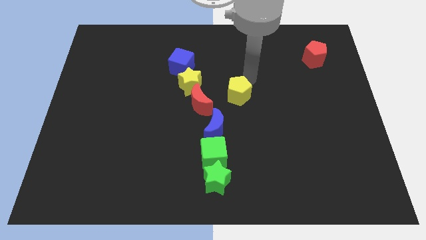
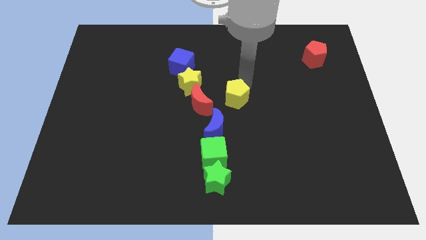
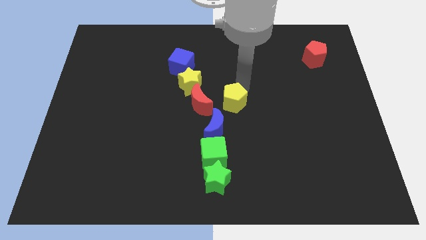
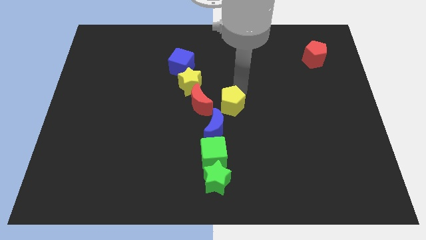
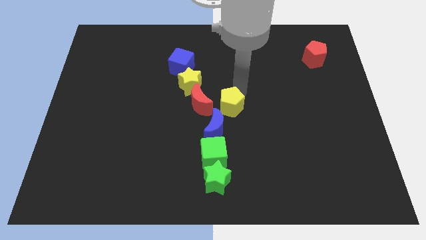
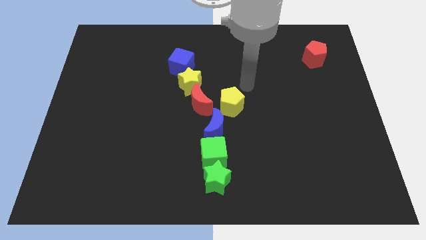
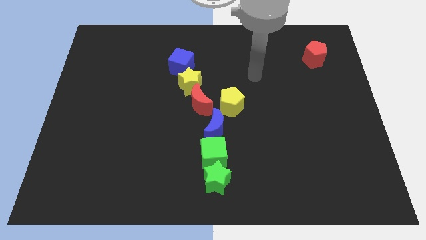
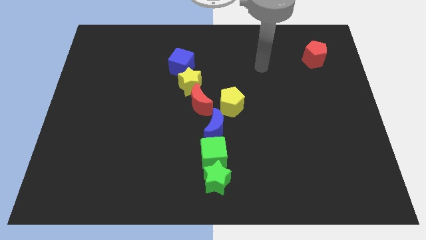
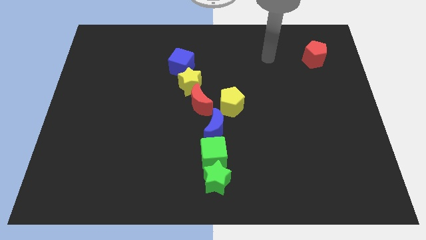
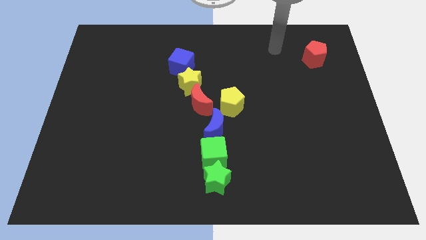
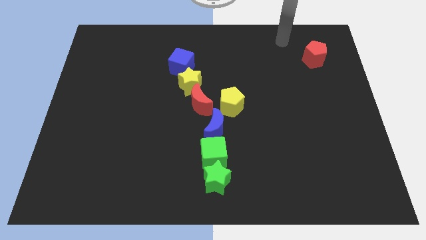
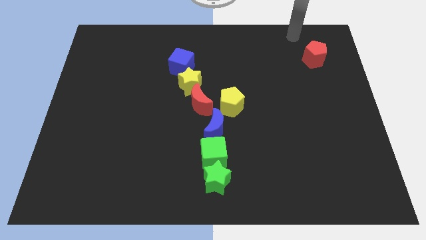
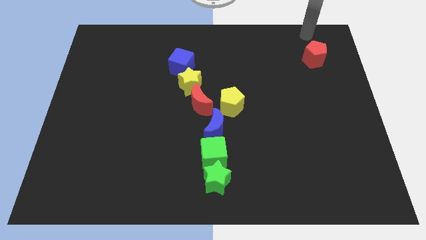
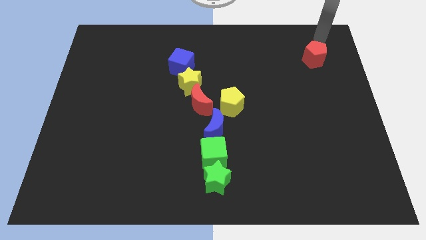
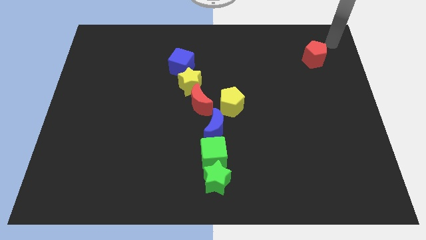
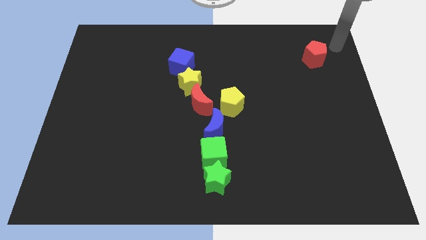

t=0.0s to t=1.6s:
adjust the yellow pentagon on the top right of the blue crescent

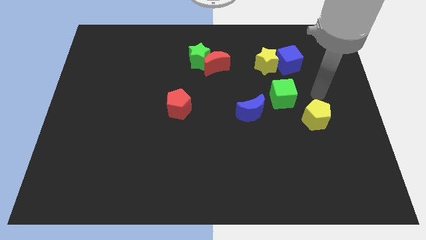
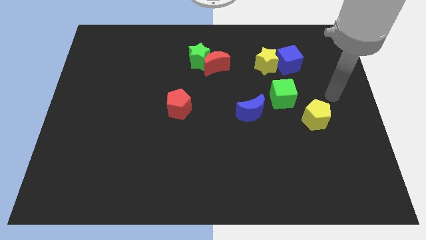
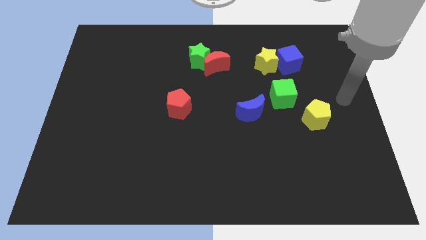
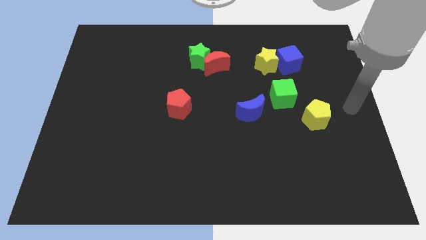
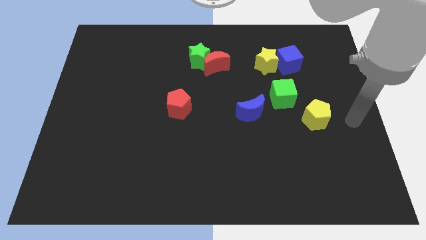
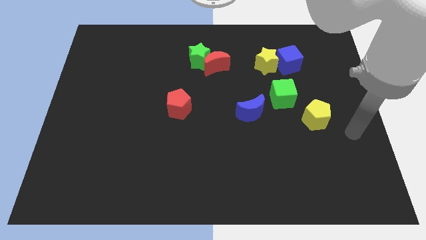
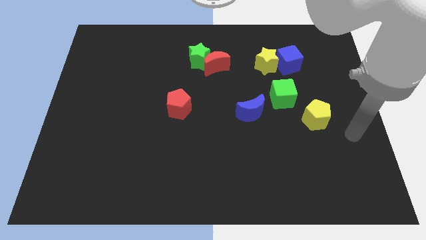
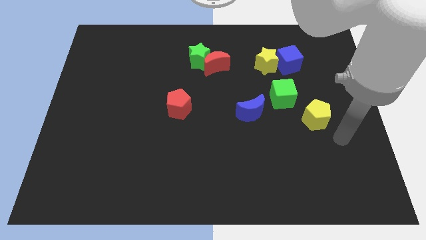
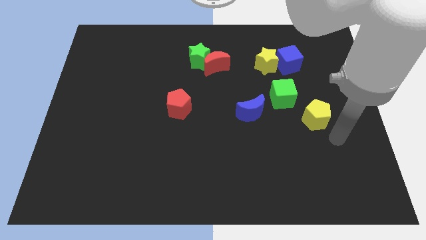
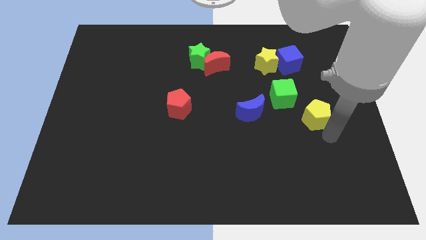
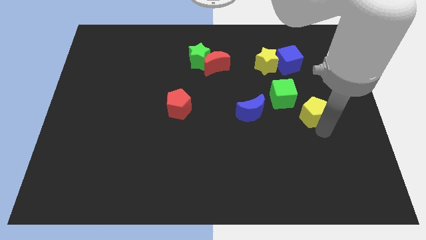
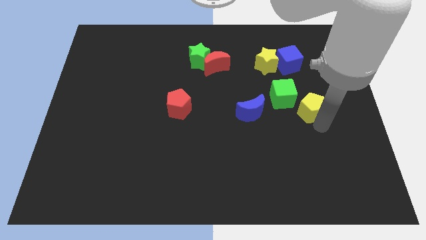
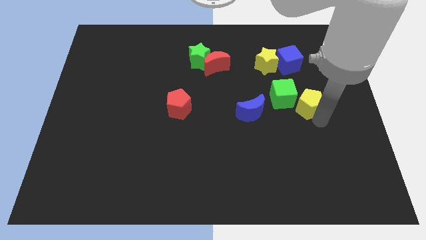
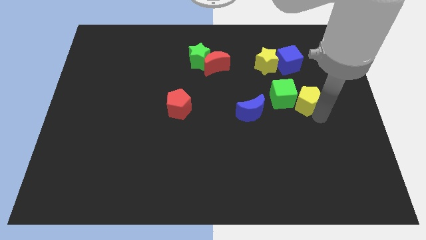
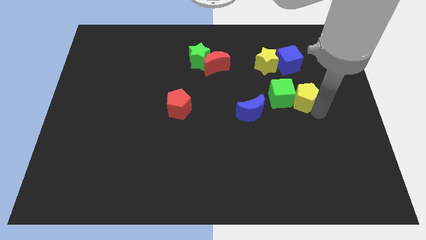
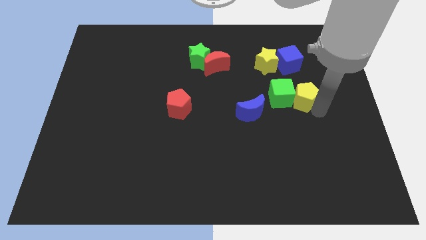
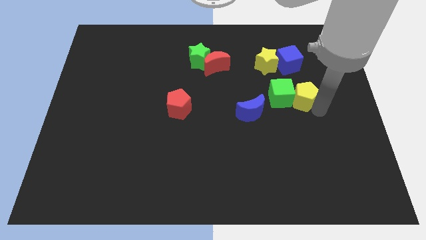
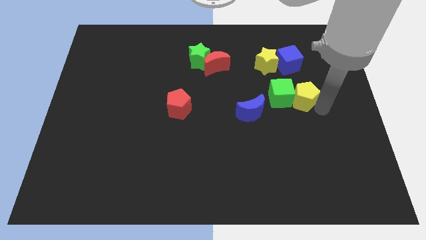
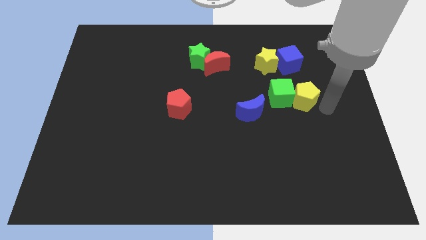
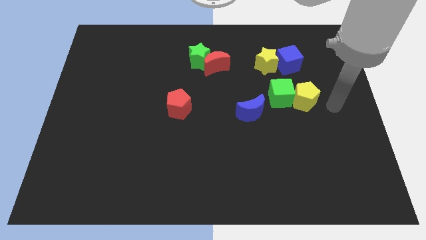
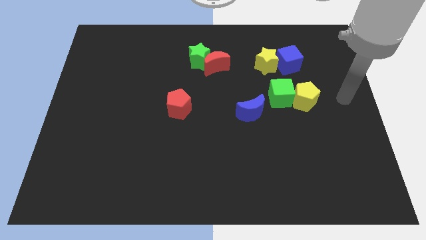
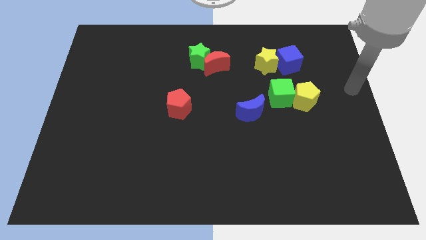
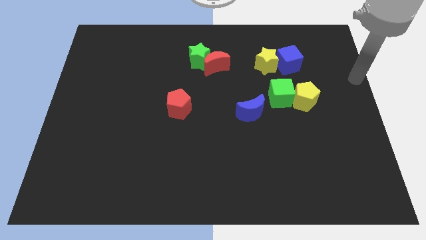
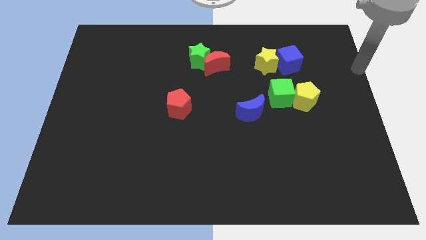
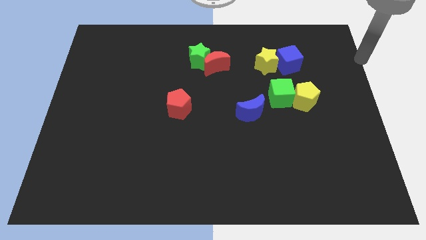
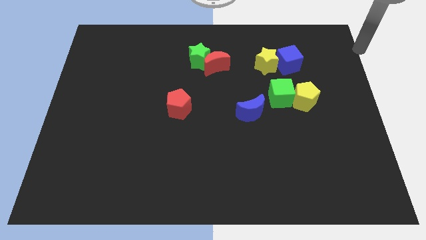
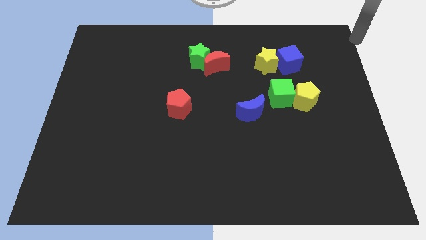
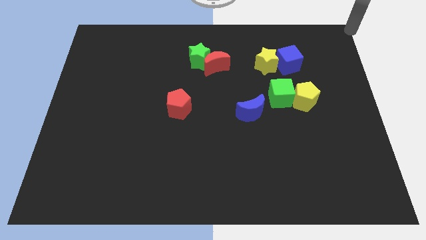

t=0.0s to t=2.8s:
place the yellow pentagon near green cube

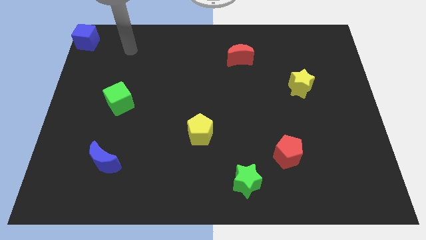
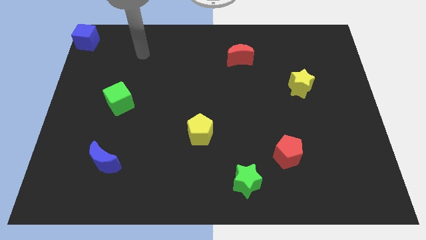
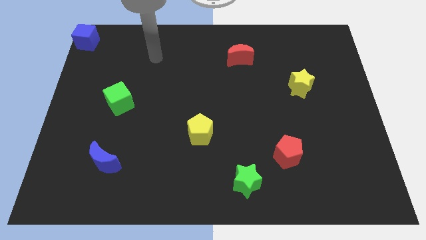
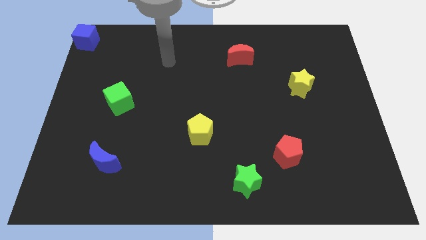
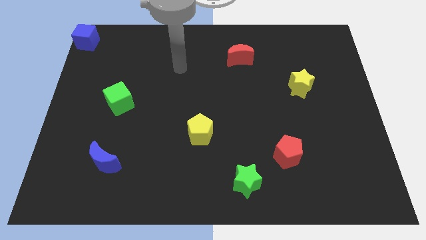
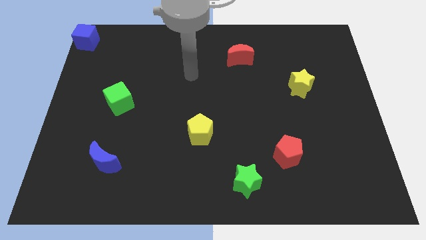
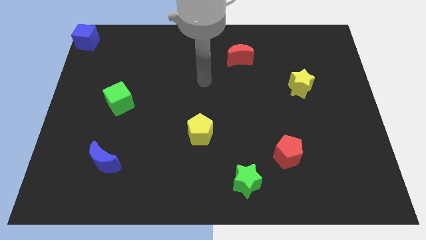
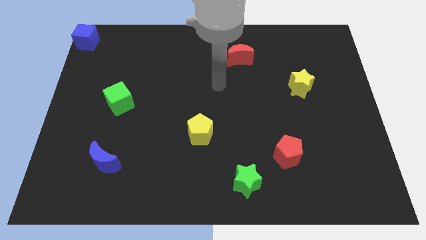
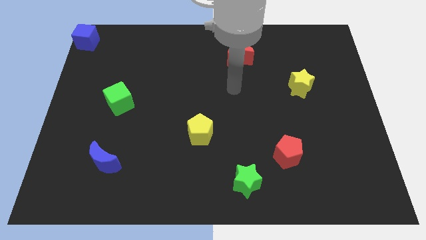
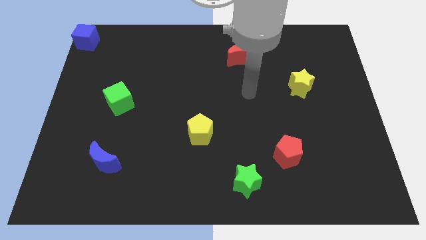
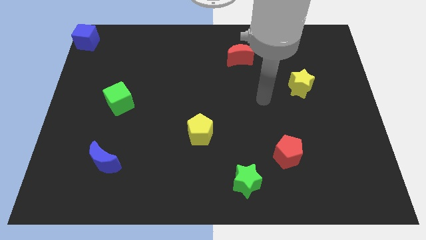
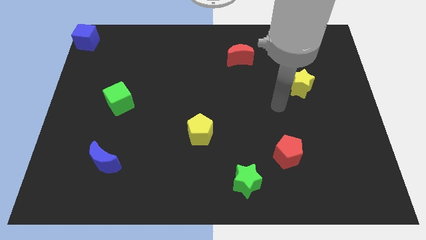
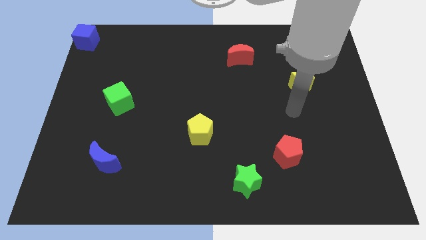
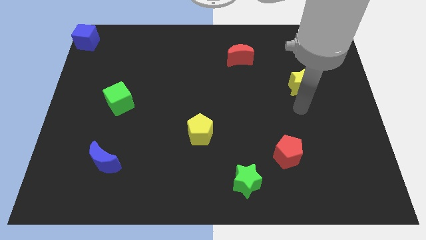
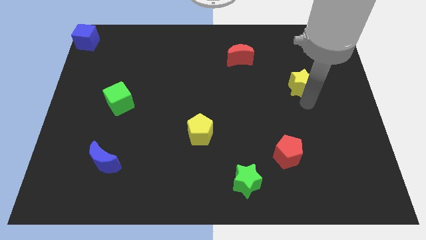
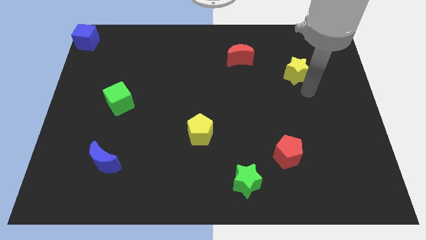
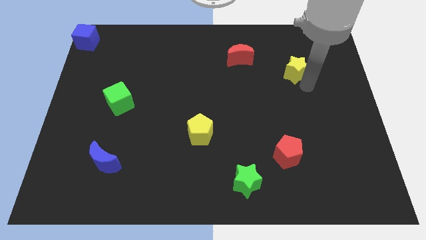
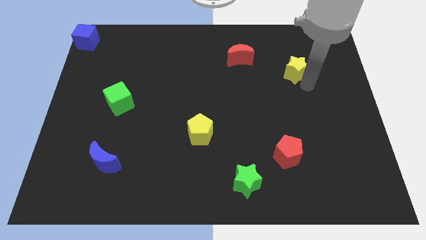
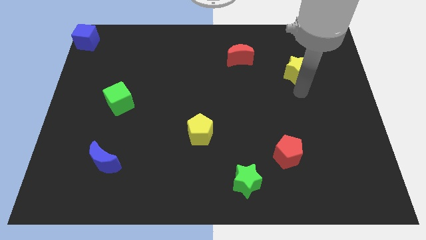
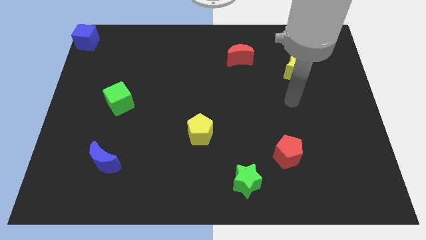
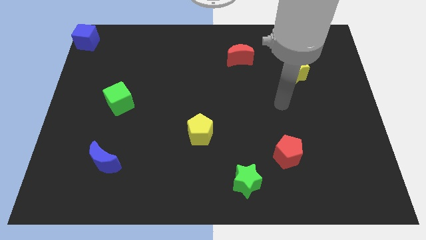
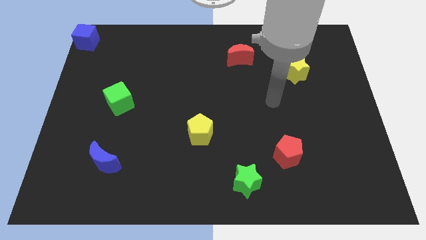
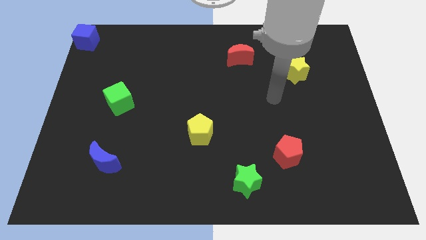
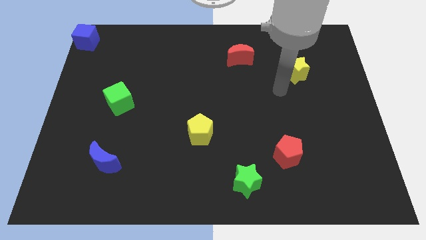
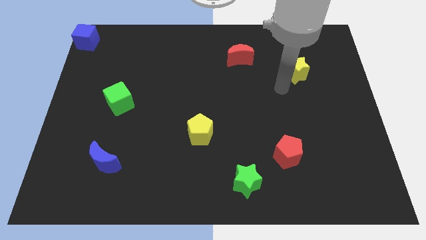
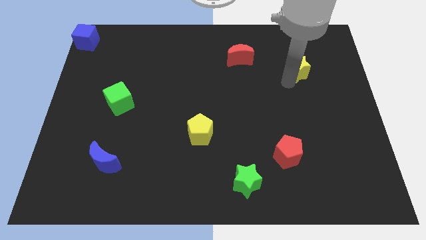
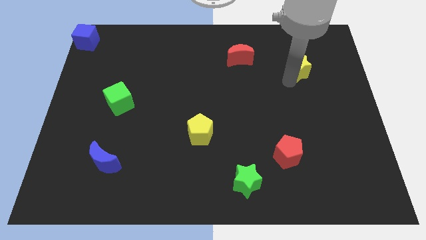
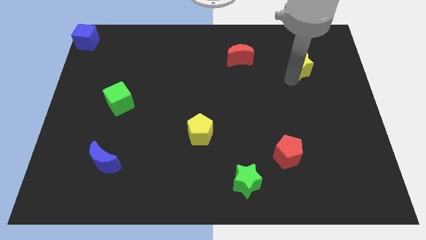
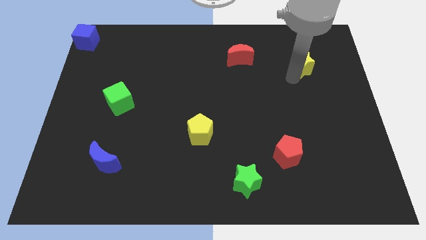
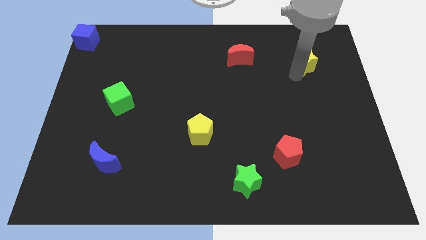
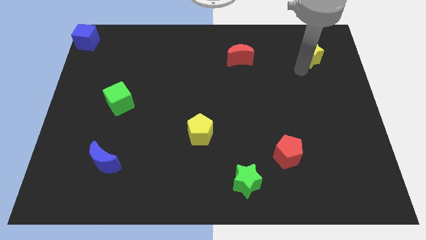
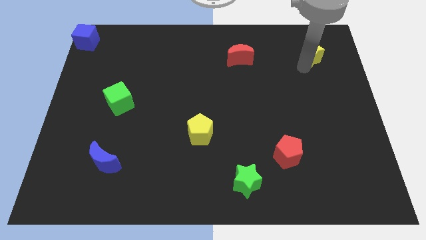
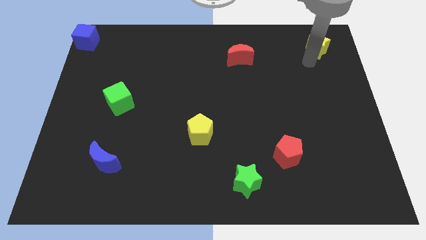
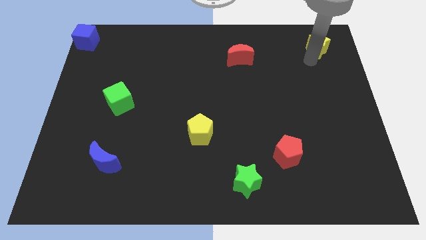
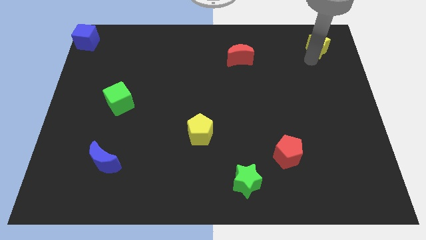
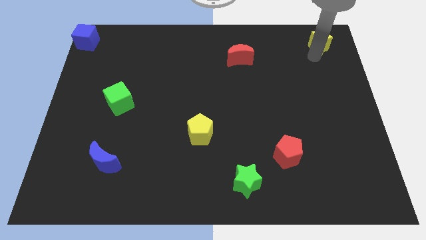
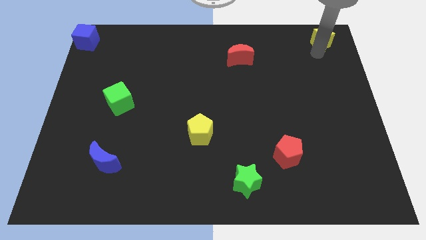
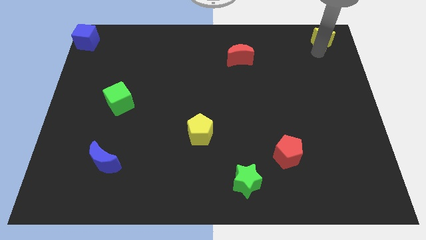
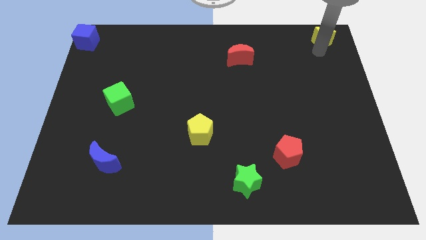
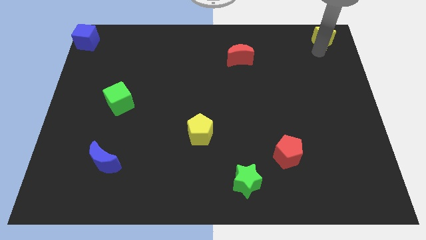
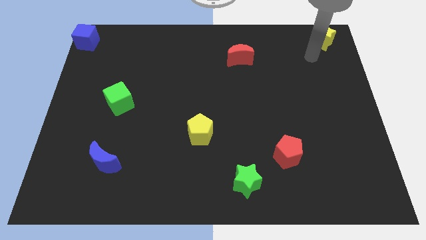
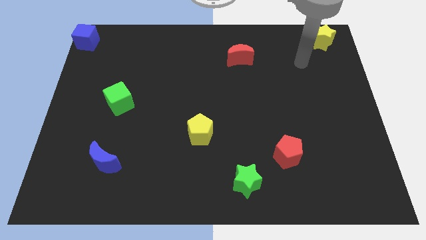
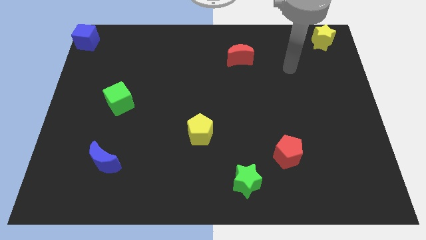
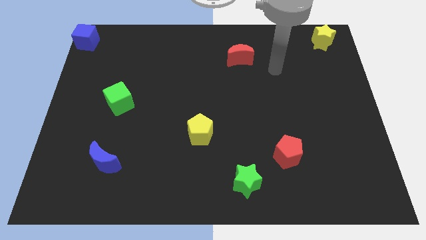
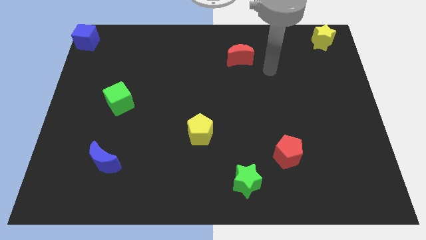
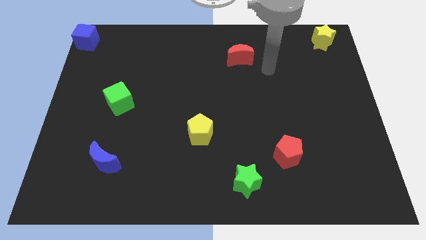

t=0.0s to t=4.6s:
move the yellow star to the top right corner of the board
